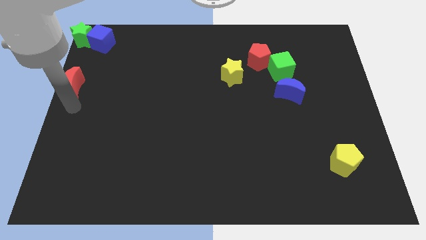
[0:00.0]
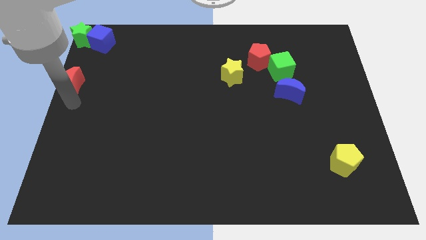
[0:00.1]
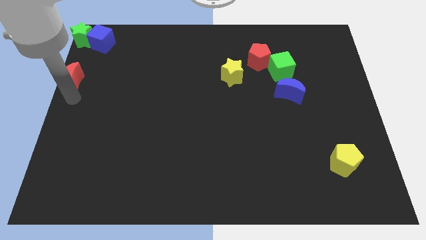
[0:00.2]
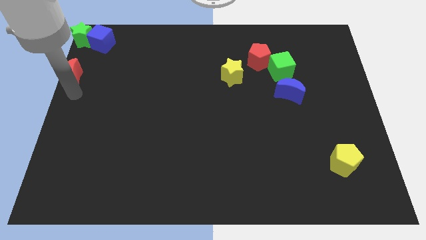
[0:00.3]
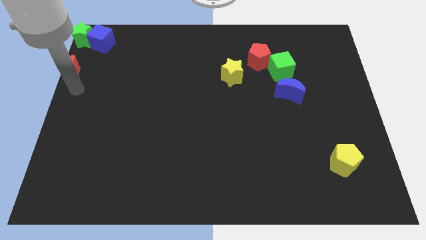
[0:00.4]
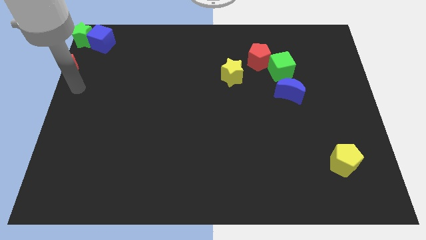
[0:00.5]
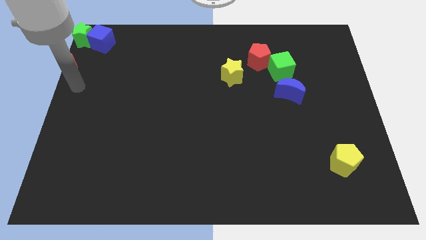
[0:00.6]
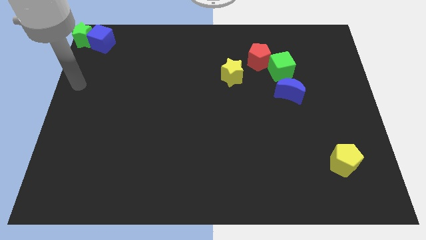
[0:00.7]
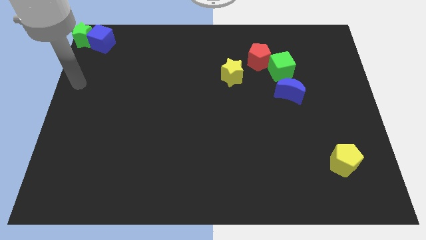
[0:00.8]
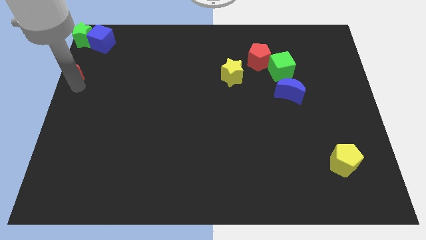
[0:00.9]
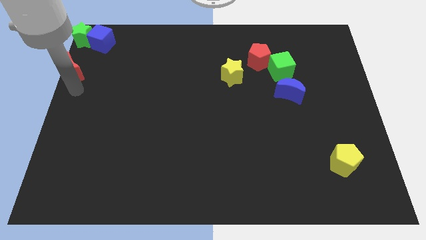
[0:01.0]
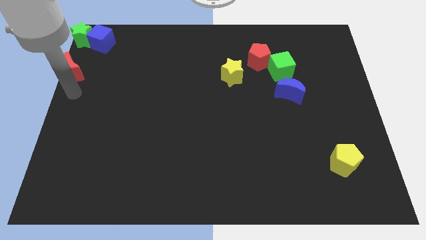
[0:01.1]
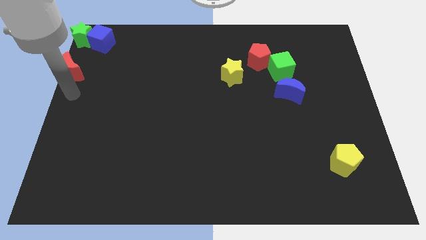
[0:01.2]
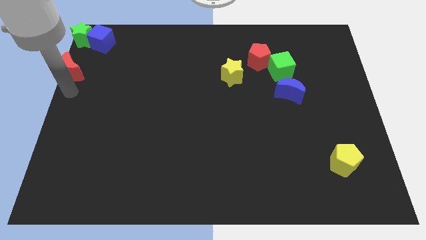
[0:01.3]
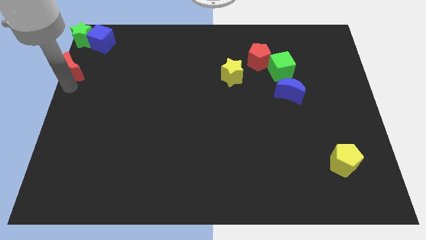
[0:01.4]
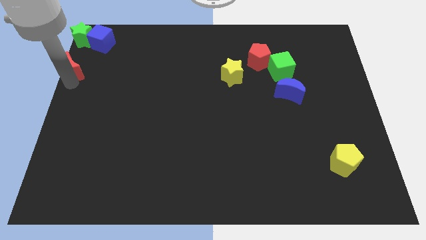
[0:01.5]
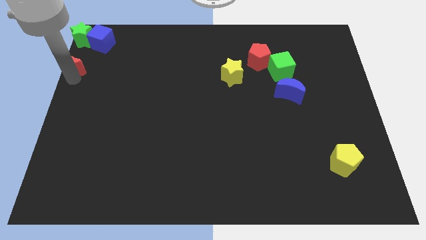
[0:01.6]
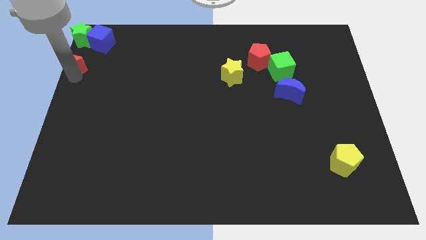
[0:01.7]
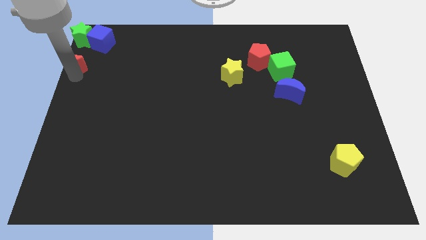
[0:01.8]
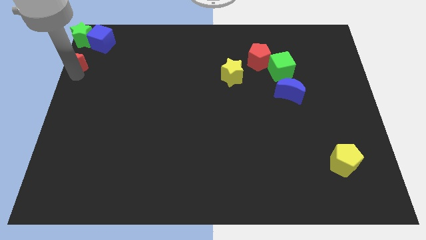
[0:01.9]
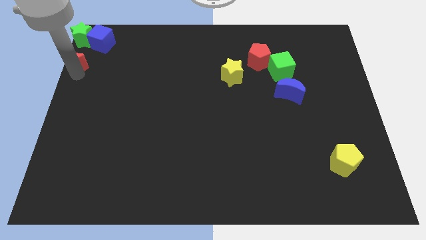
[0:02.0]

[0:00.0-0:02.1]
place the red crescent to the bottom of the green star

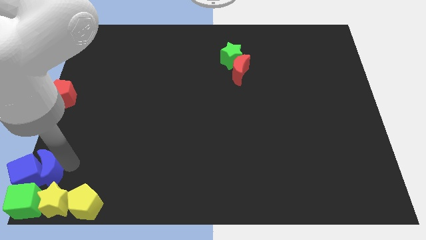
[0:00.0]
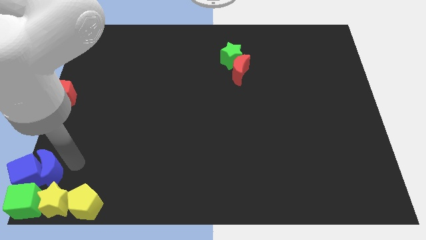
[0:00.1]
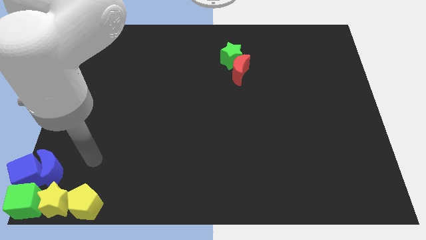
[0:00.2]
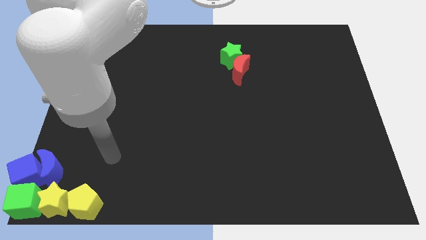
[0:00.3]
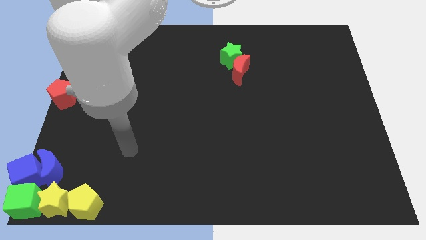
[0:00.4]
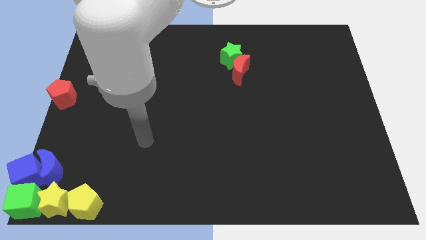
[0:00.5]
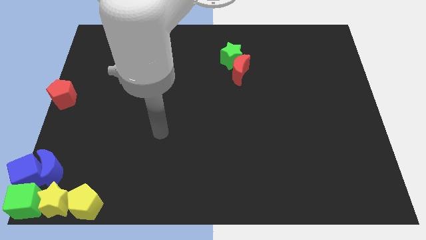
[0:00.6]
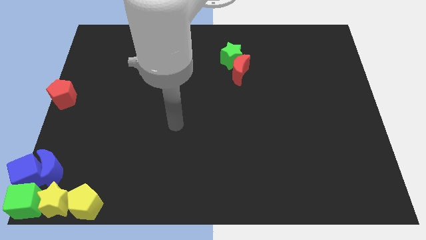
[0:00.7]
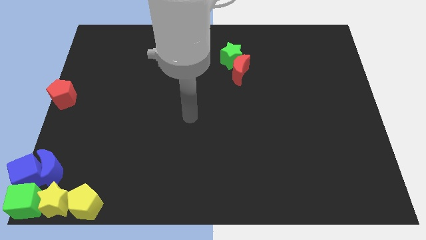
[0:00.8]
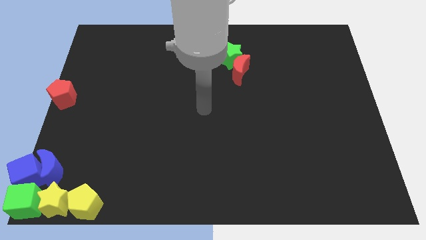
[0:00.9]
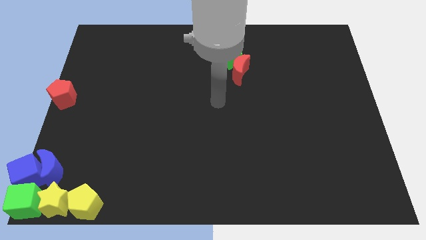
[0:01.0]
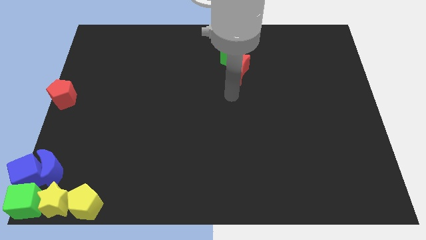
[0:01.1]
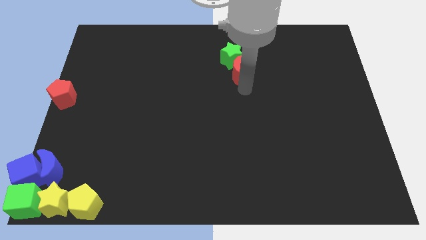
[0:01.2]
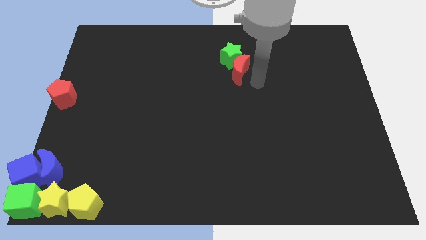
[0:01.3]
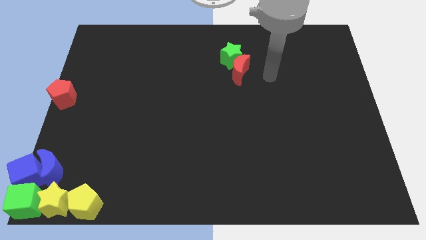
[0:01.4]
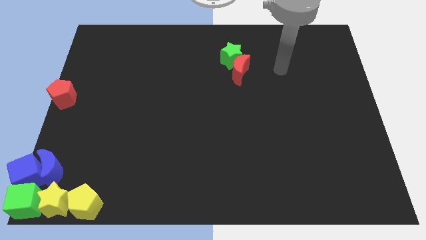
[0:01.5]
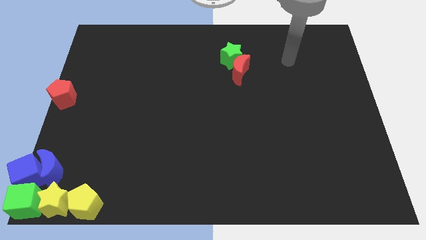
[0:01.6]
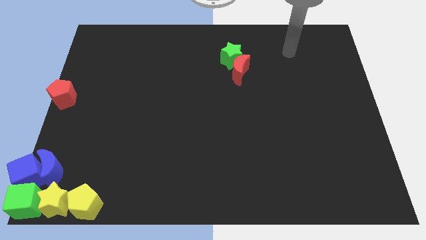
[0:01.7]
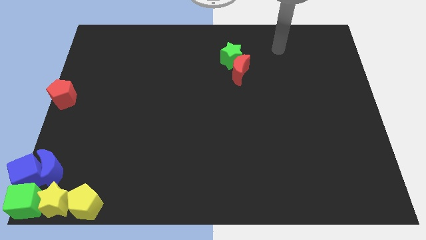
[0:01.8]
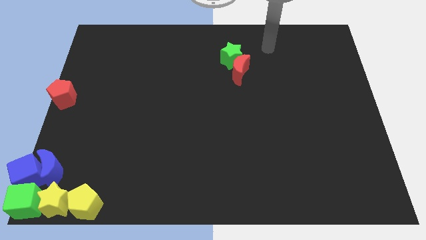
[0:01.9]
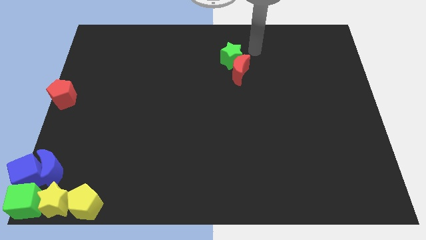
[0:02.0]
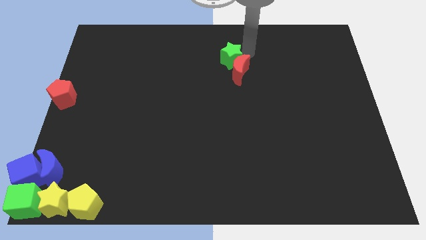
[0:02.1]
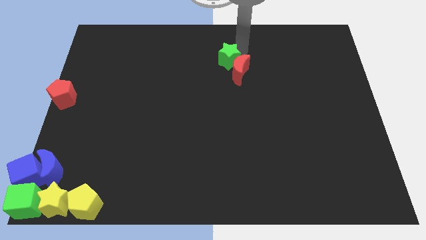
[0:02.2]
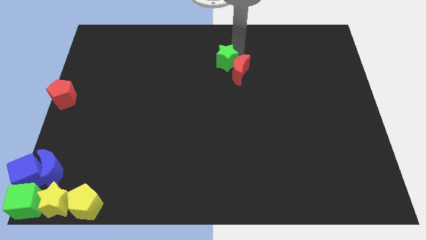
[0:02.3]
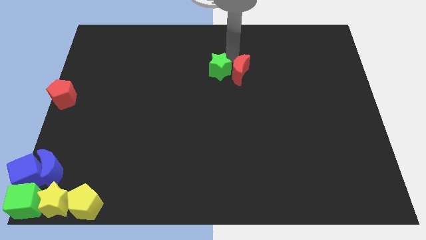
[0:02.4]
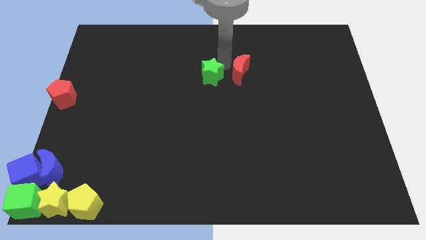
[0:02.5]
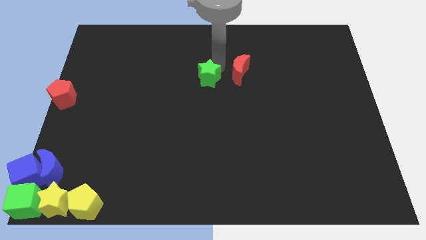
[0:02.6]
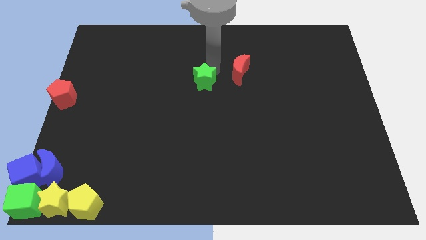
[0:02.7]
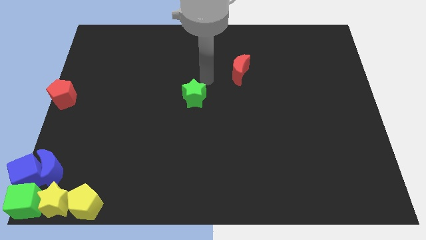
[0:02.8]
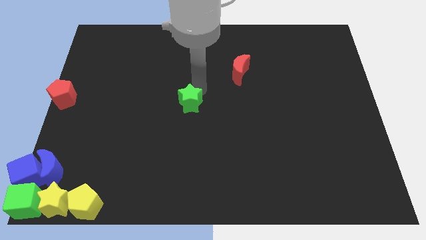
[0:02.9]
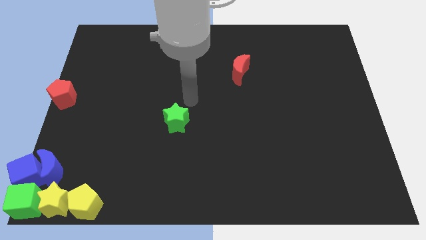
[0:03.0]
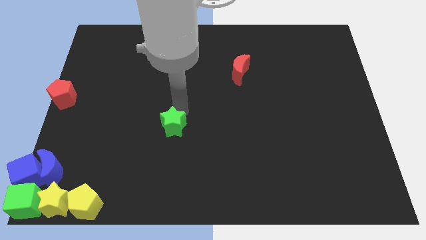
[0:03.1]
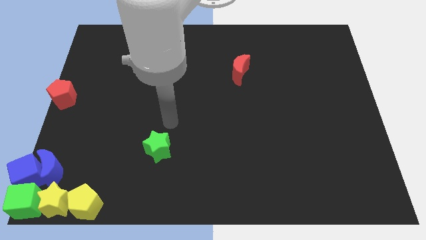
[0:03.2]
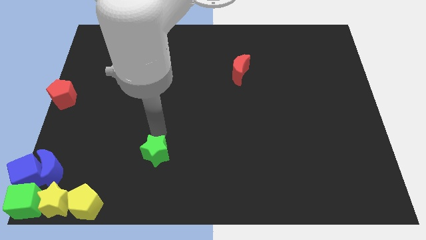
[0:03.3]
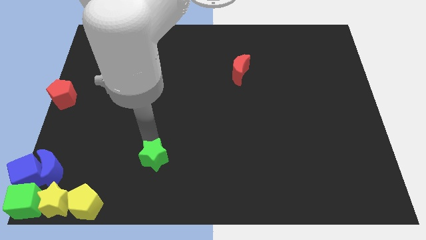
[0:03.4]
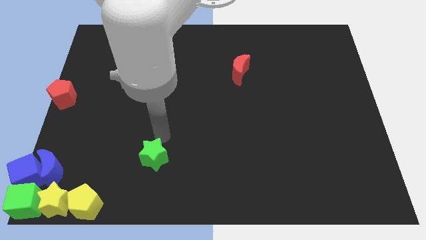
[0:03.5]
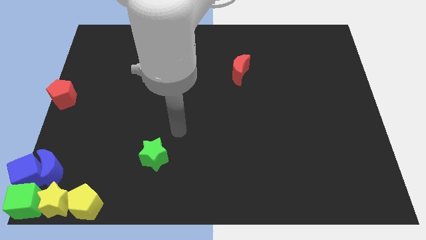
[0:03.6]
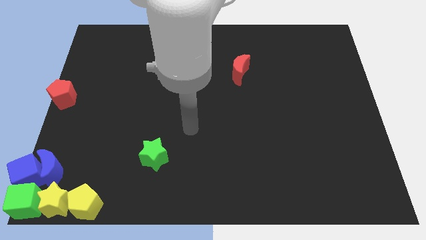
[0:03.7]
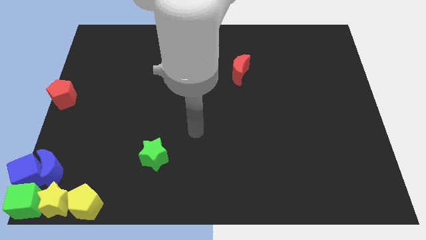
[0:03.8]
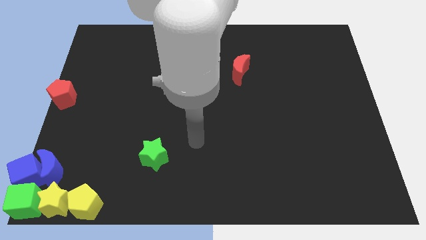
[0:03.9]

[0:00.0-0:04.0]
push the green star towards the bottom side of the board

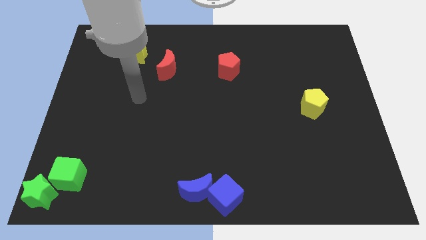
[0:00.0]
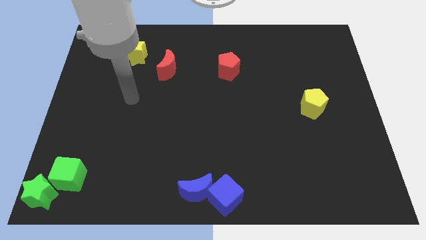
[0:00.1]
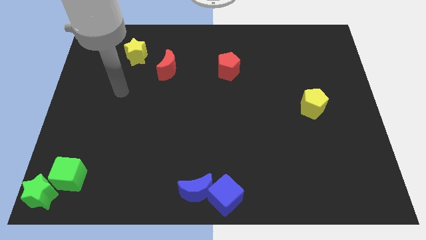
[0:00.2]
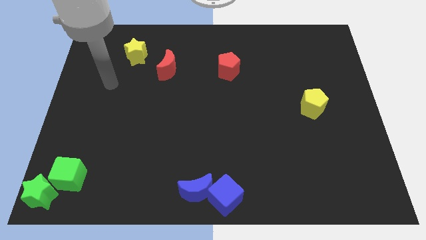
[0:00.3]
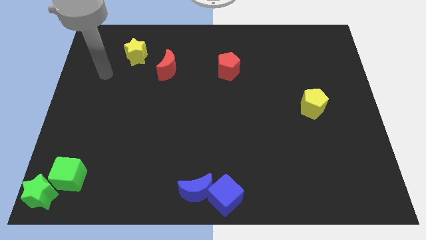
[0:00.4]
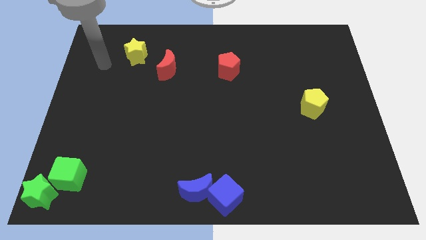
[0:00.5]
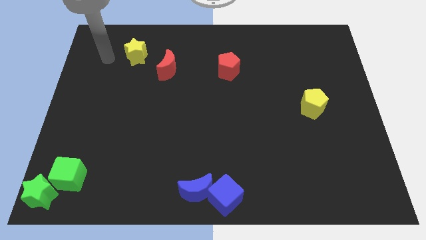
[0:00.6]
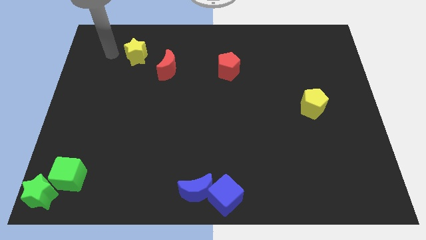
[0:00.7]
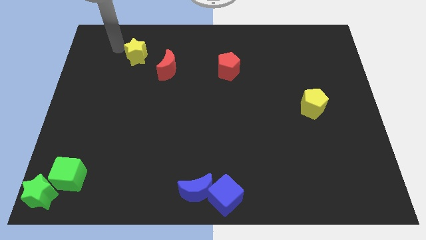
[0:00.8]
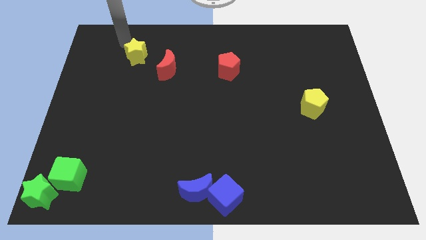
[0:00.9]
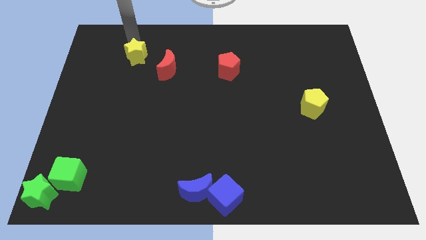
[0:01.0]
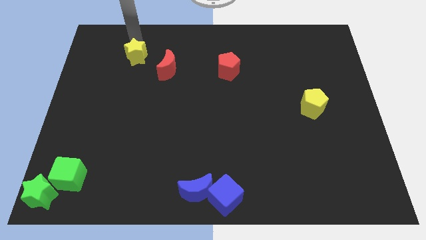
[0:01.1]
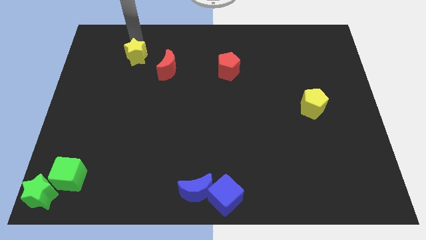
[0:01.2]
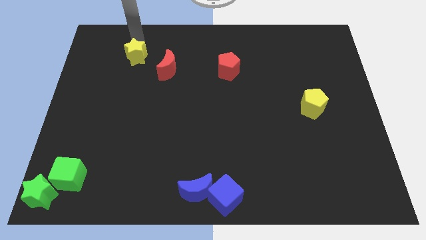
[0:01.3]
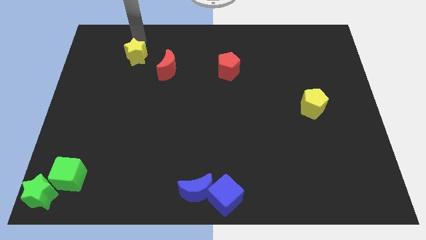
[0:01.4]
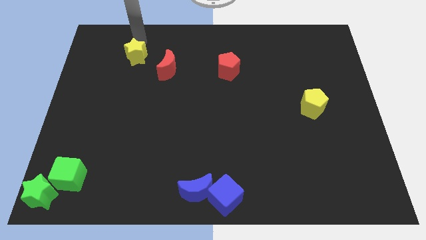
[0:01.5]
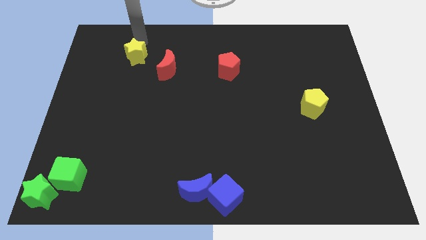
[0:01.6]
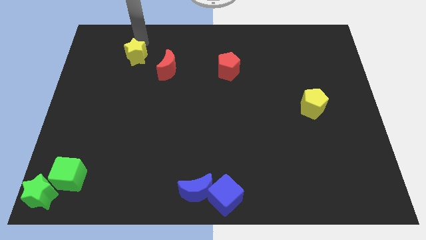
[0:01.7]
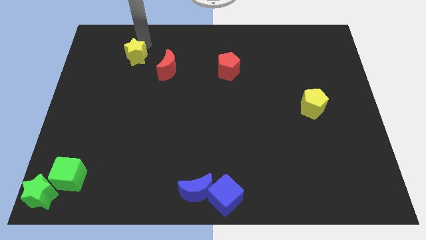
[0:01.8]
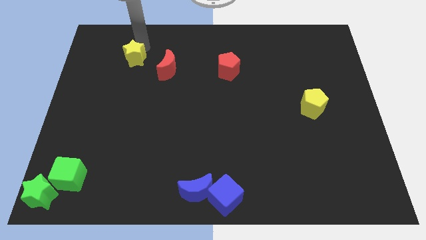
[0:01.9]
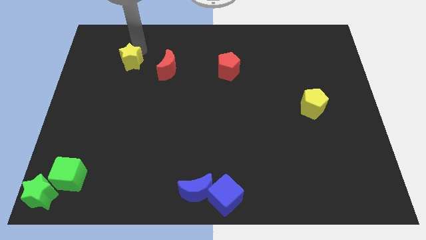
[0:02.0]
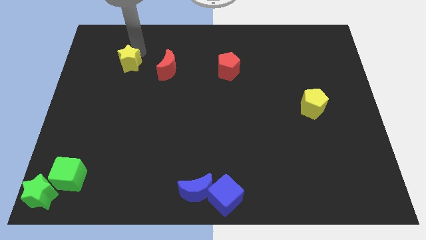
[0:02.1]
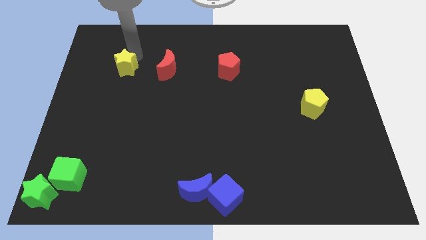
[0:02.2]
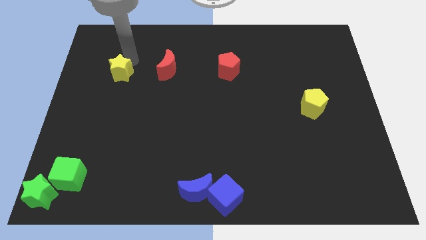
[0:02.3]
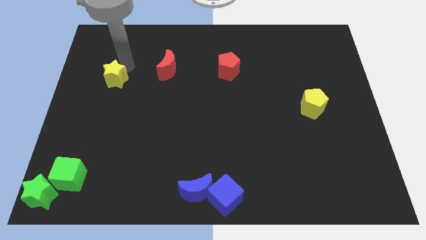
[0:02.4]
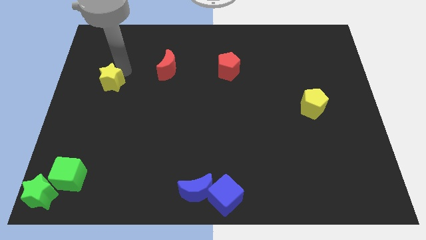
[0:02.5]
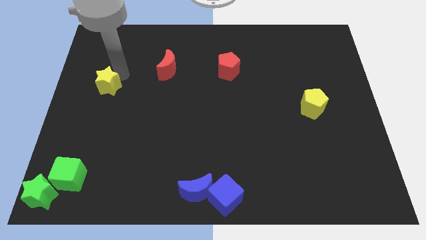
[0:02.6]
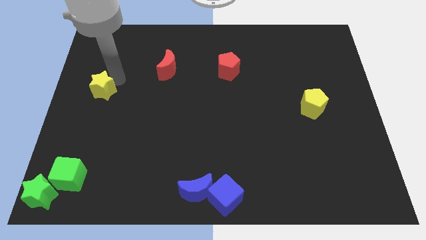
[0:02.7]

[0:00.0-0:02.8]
slightly push the yellow star downwards

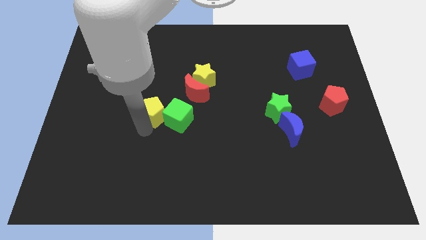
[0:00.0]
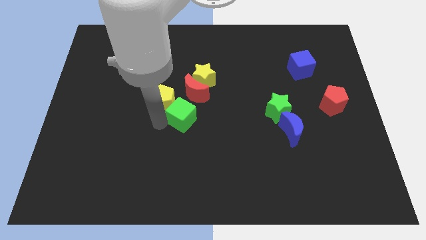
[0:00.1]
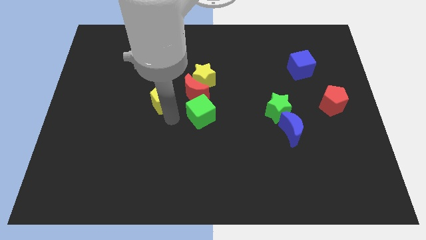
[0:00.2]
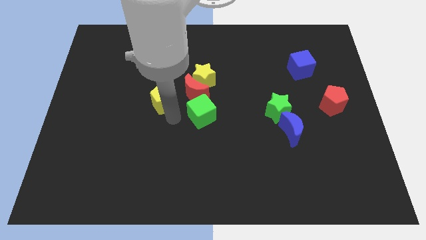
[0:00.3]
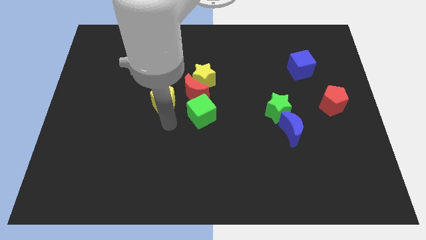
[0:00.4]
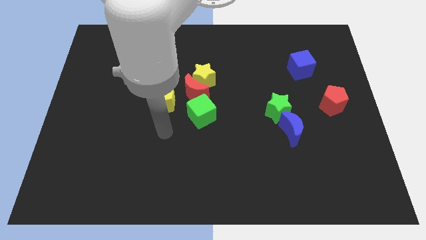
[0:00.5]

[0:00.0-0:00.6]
separate the green cube and yellow pentagon
